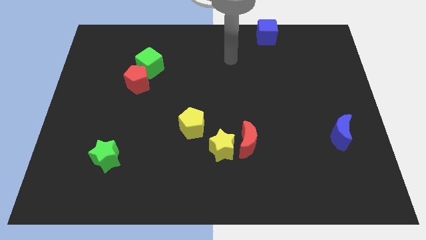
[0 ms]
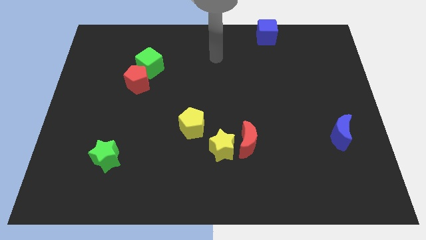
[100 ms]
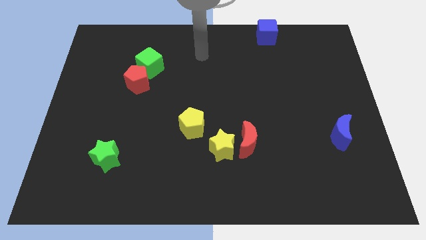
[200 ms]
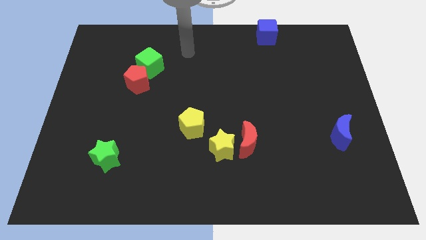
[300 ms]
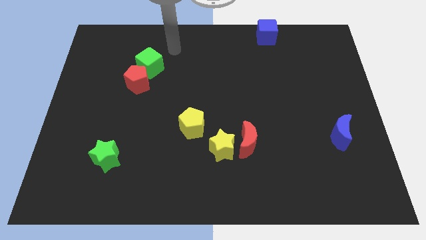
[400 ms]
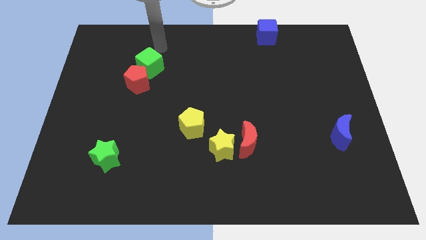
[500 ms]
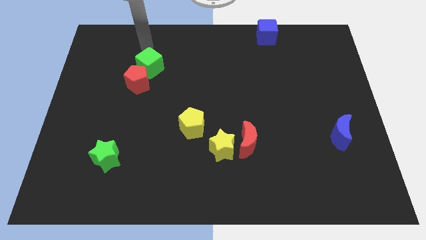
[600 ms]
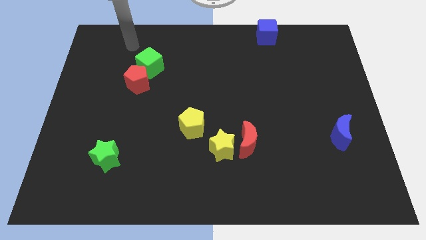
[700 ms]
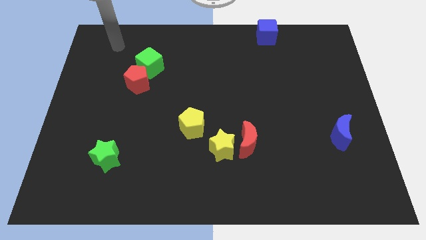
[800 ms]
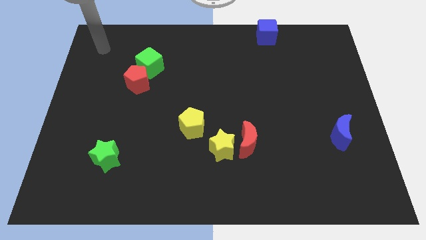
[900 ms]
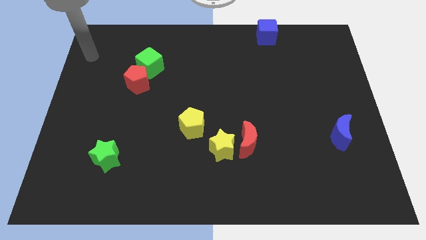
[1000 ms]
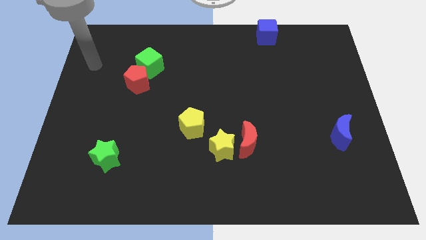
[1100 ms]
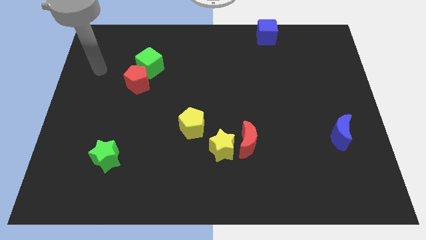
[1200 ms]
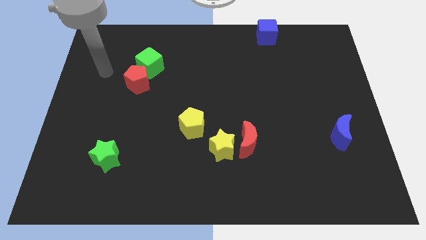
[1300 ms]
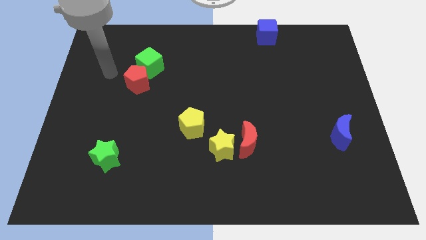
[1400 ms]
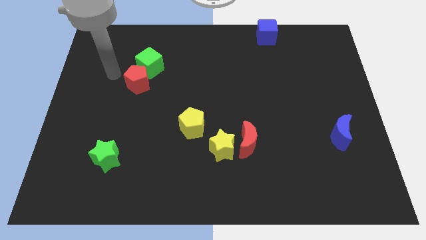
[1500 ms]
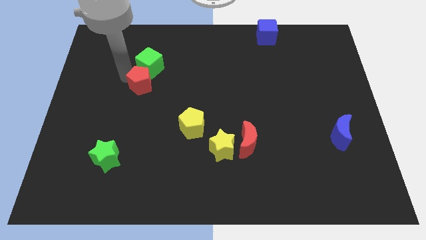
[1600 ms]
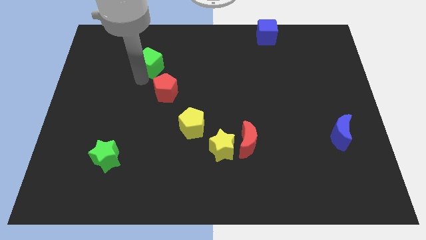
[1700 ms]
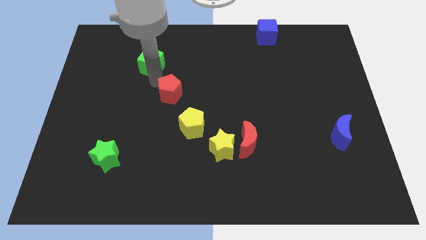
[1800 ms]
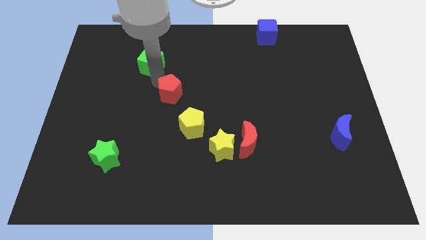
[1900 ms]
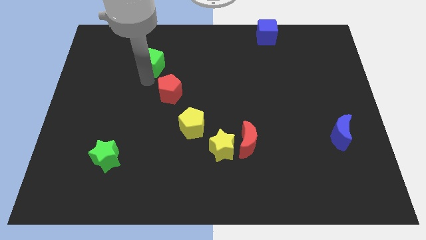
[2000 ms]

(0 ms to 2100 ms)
push the red pentagon slightly to the right

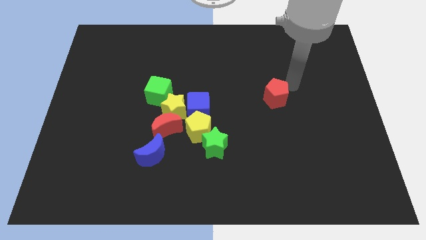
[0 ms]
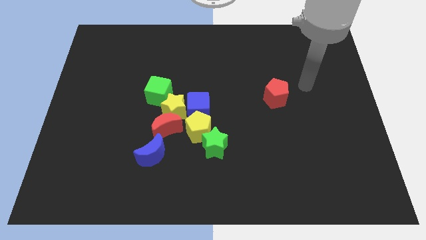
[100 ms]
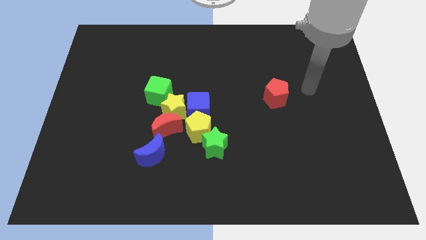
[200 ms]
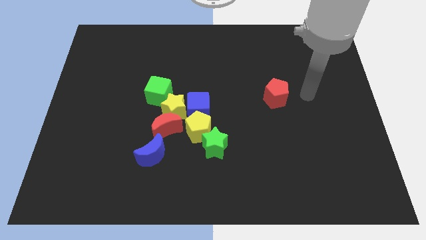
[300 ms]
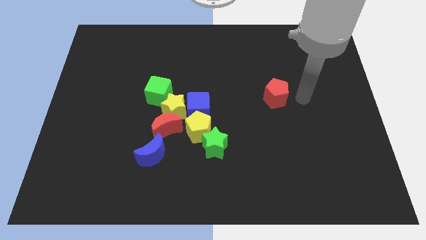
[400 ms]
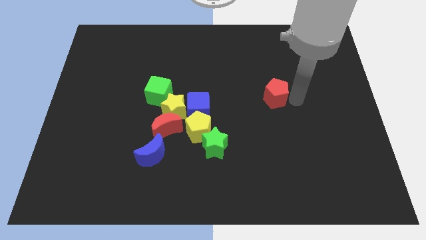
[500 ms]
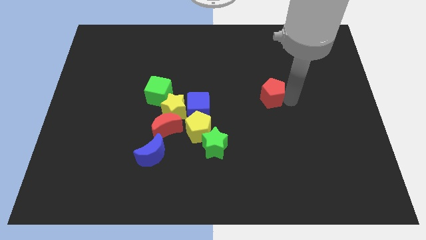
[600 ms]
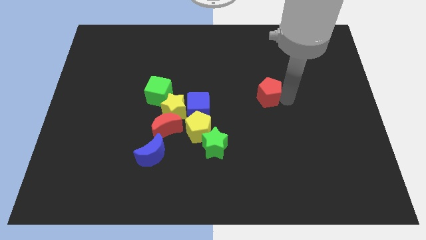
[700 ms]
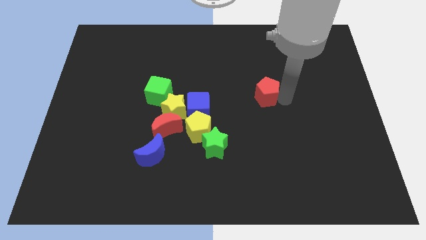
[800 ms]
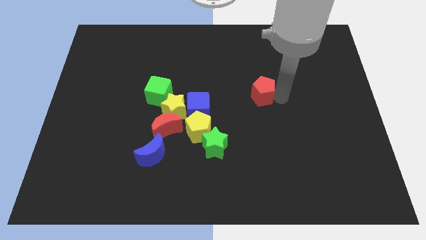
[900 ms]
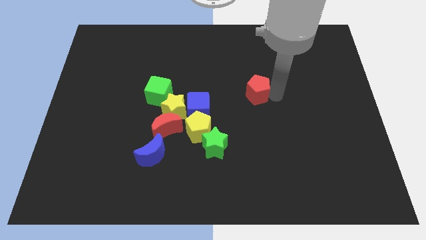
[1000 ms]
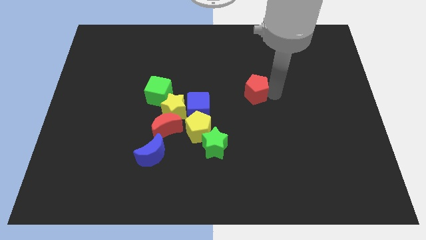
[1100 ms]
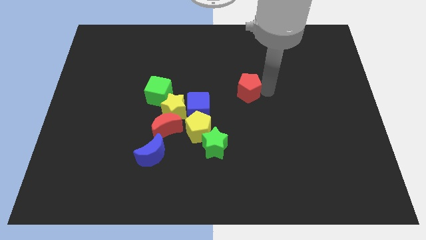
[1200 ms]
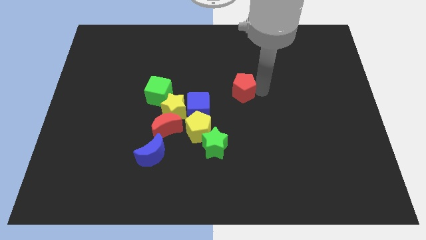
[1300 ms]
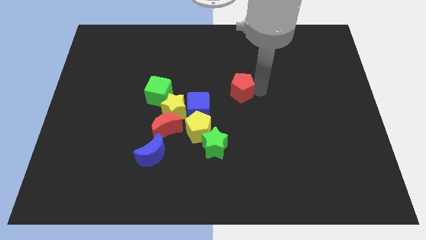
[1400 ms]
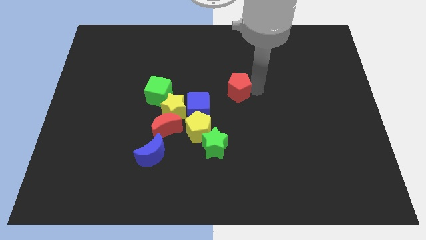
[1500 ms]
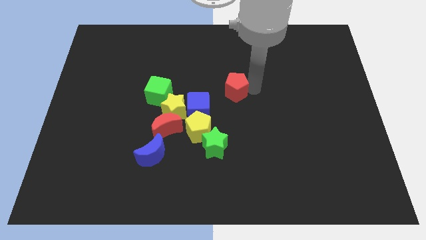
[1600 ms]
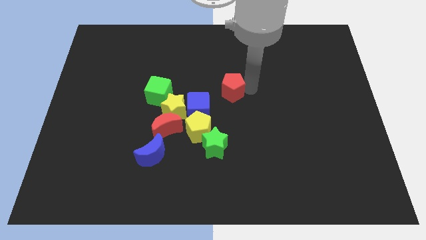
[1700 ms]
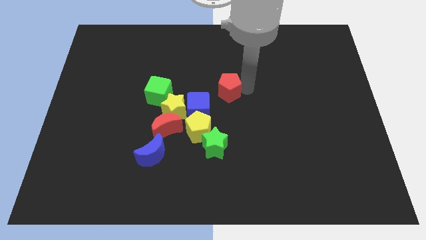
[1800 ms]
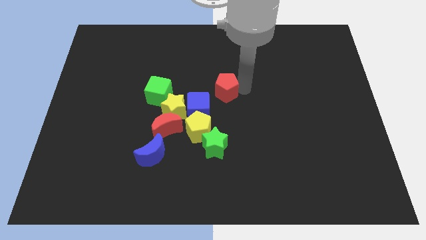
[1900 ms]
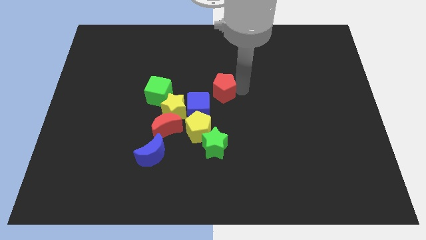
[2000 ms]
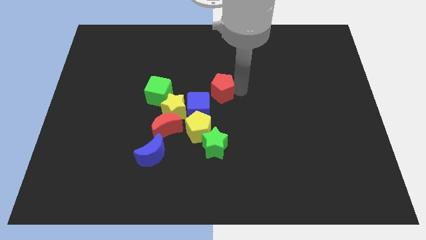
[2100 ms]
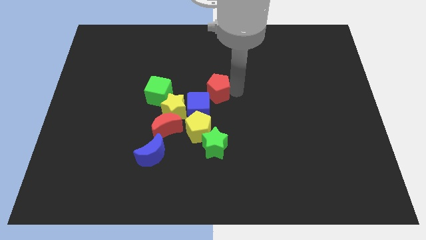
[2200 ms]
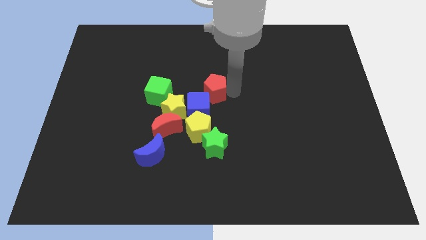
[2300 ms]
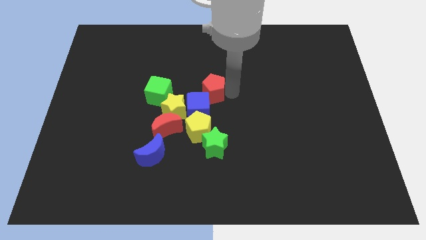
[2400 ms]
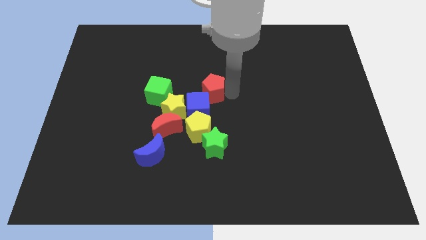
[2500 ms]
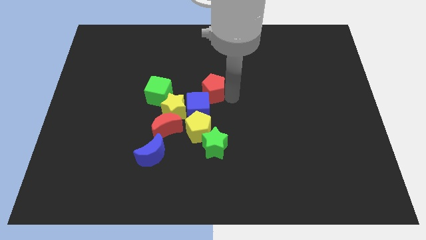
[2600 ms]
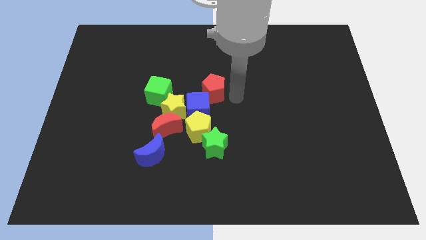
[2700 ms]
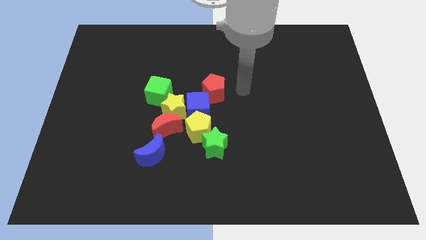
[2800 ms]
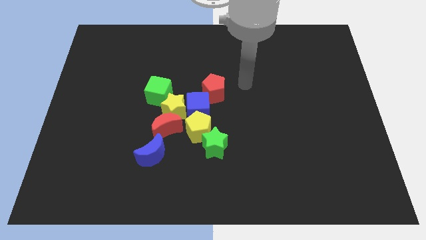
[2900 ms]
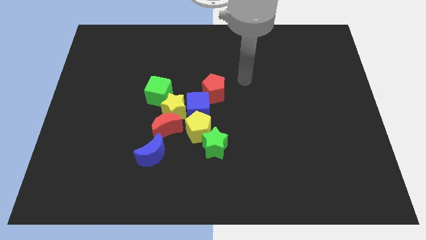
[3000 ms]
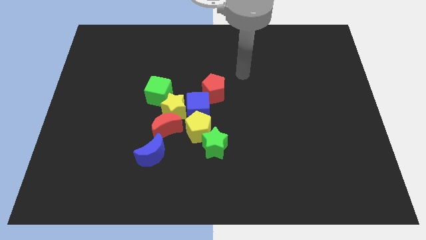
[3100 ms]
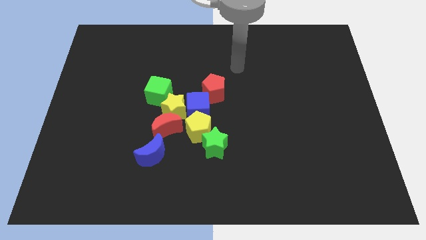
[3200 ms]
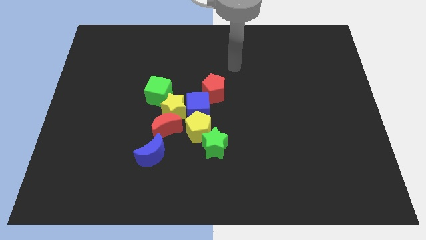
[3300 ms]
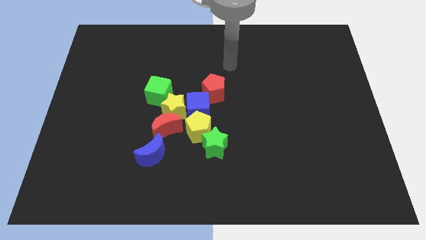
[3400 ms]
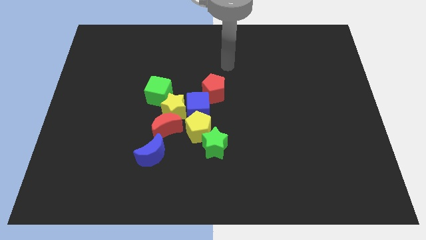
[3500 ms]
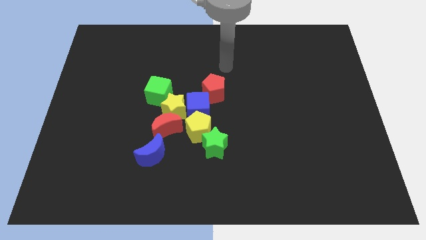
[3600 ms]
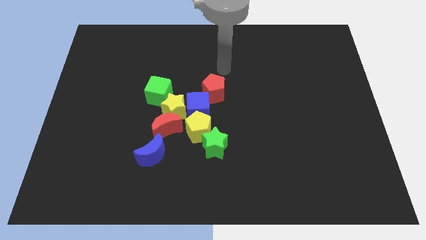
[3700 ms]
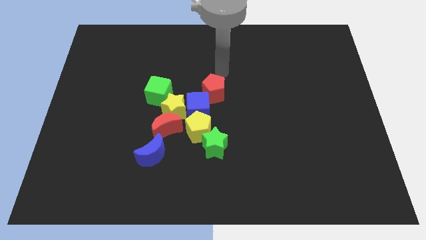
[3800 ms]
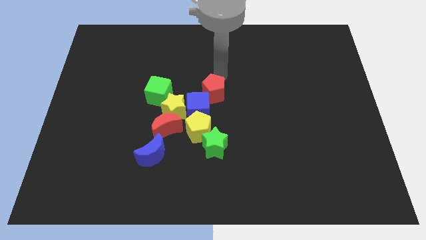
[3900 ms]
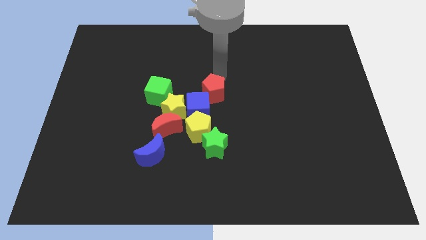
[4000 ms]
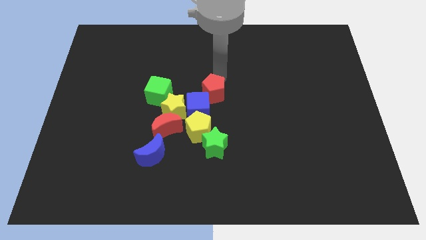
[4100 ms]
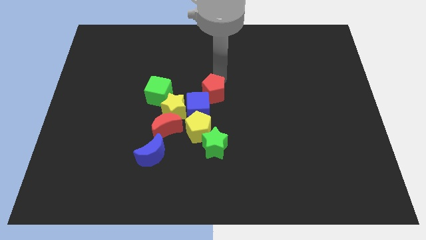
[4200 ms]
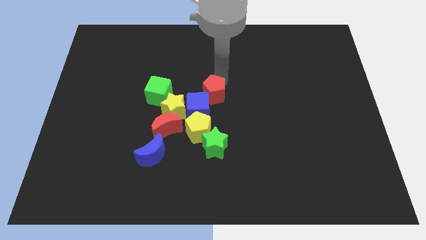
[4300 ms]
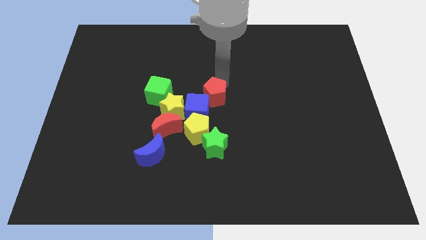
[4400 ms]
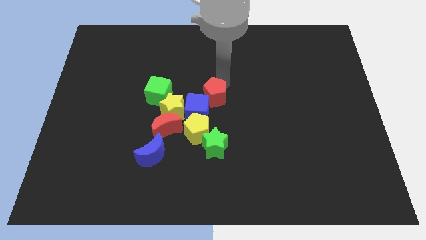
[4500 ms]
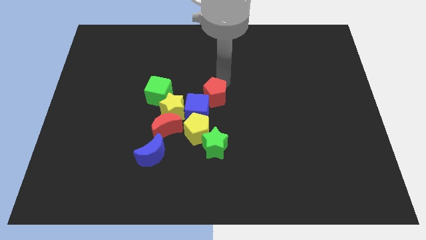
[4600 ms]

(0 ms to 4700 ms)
push the red pentagon into the group of blocks

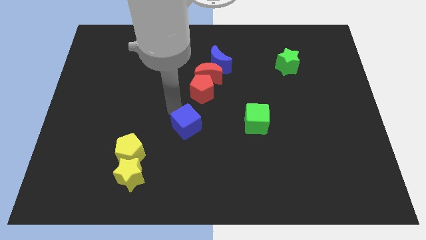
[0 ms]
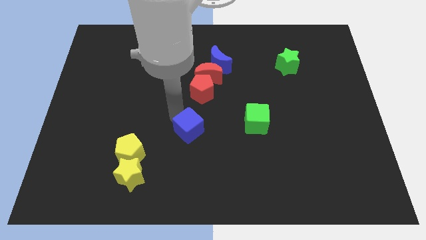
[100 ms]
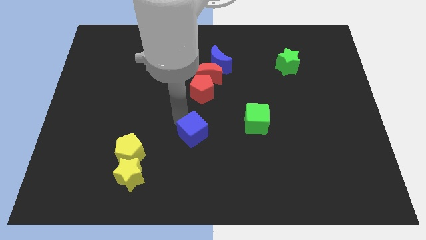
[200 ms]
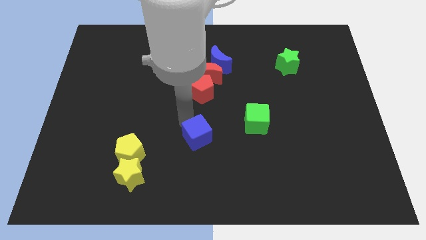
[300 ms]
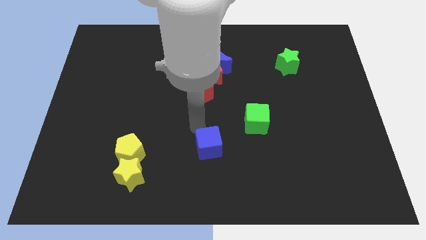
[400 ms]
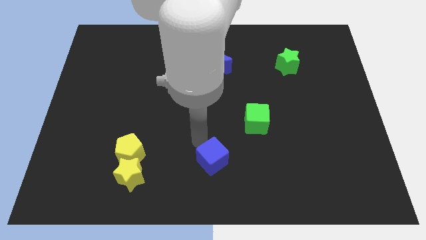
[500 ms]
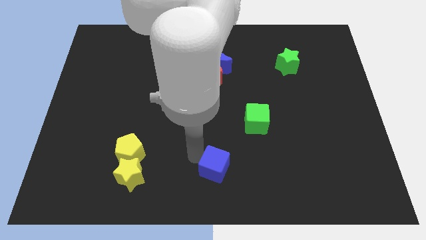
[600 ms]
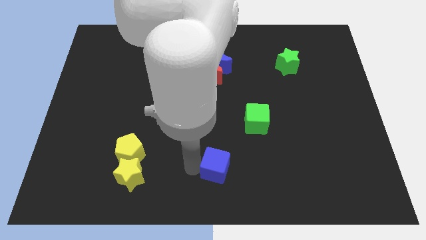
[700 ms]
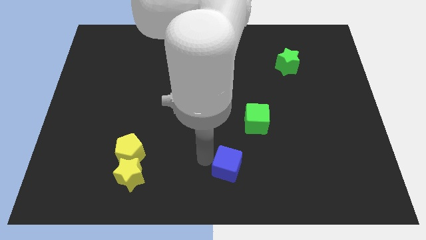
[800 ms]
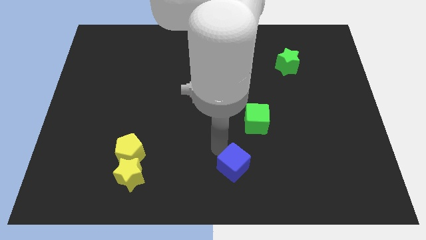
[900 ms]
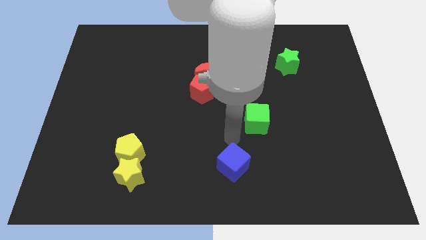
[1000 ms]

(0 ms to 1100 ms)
move blue cube diagonally

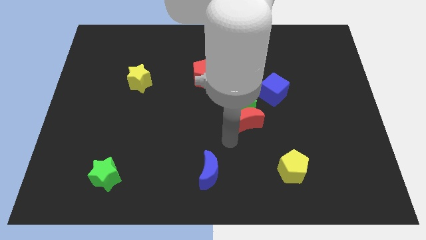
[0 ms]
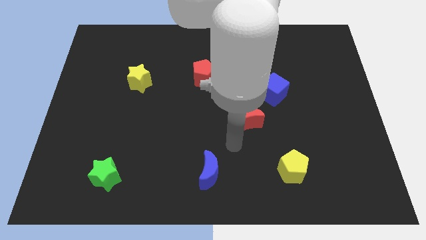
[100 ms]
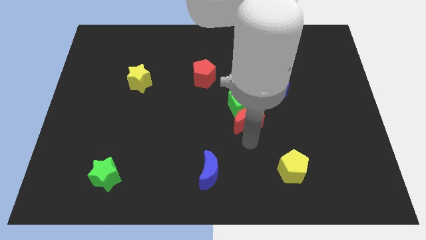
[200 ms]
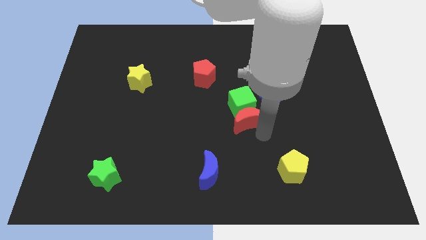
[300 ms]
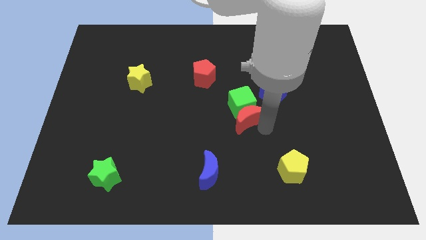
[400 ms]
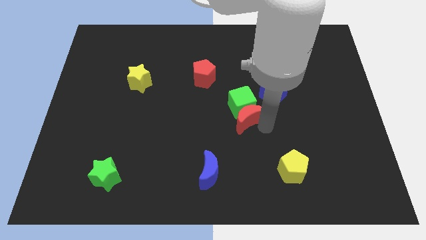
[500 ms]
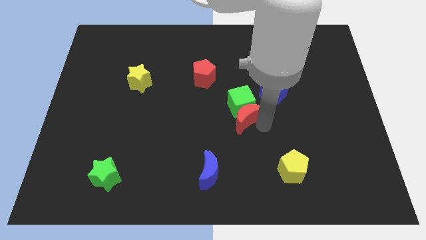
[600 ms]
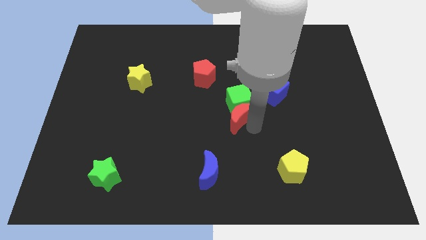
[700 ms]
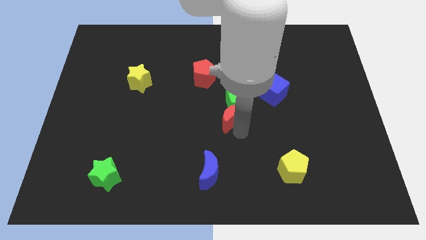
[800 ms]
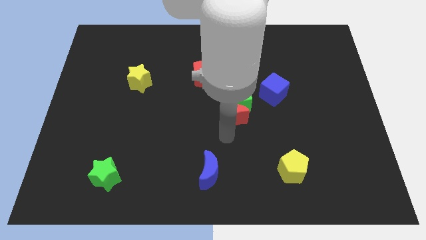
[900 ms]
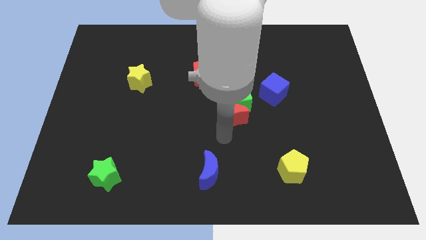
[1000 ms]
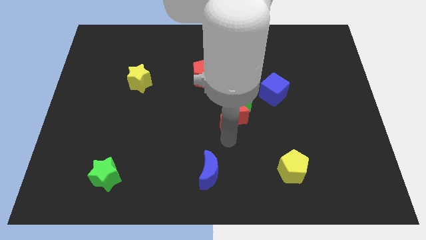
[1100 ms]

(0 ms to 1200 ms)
push red crescent slightly above

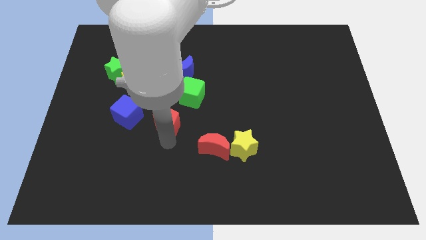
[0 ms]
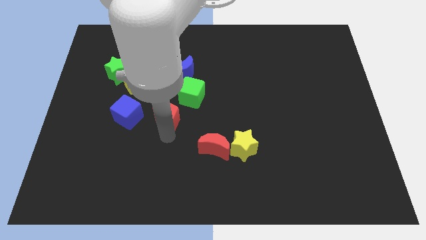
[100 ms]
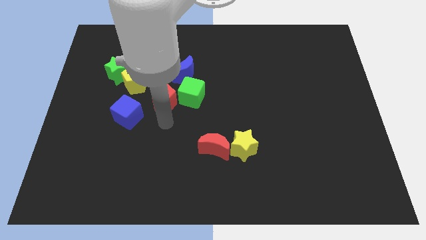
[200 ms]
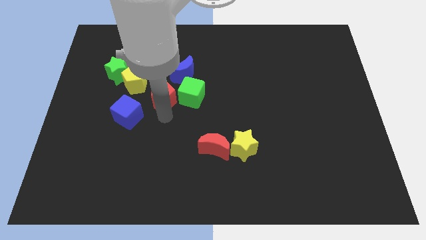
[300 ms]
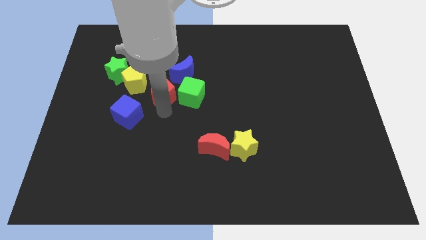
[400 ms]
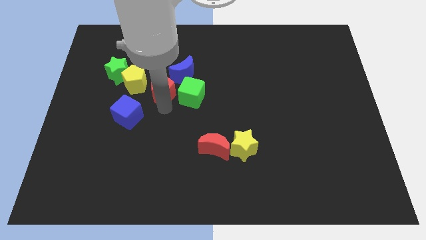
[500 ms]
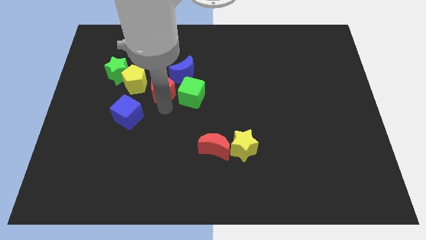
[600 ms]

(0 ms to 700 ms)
push the red pentagon left to the green cube
